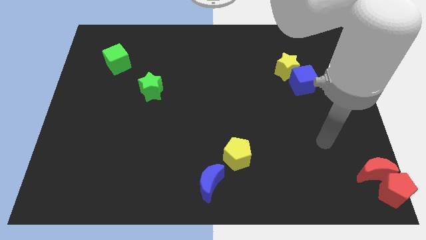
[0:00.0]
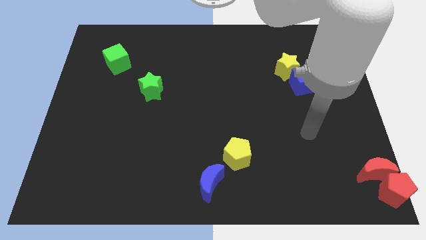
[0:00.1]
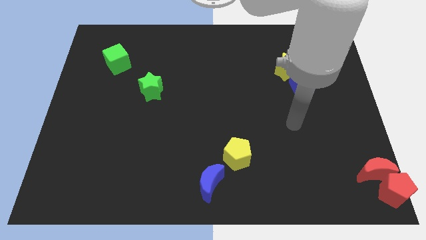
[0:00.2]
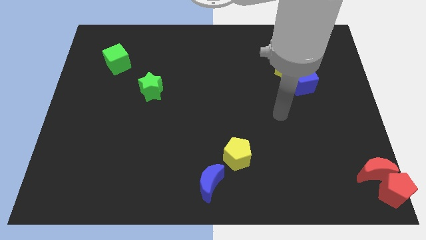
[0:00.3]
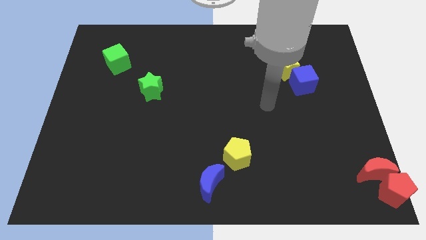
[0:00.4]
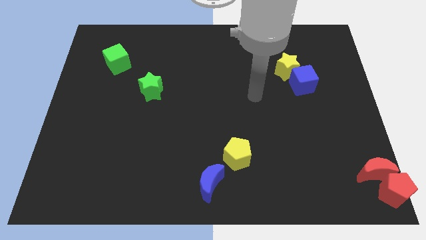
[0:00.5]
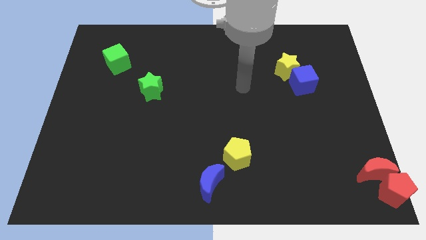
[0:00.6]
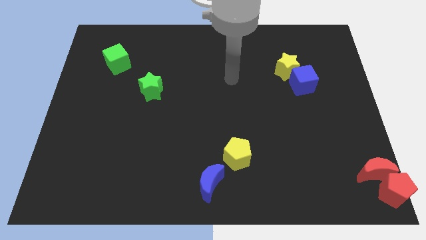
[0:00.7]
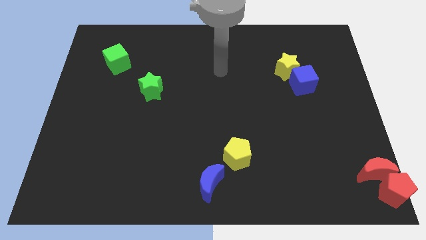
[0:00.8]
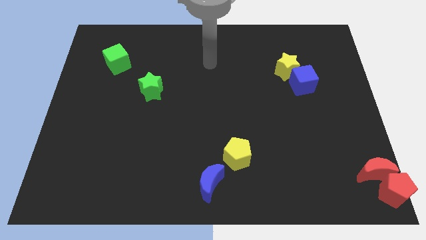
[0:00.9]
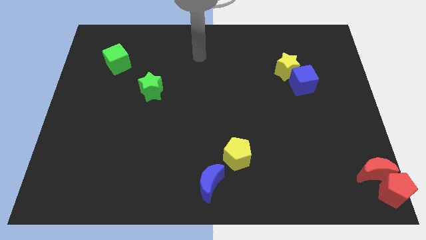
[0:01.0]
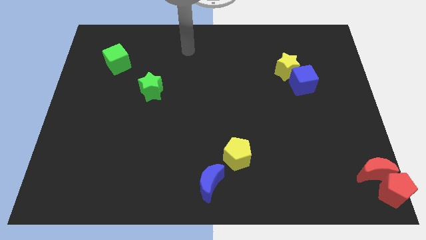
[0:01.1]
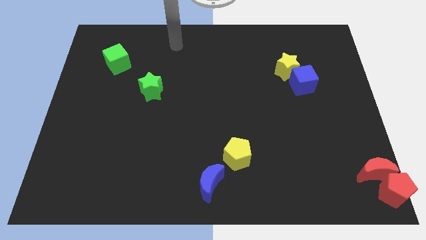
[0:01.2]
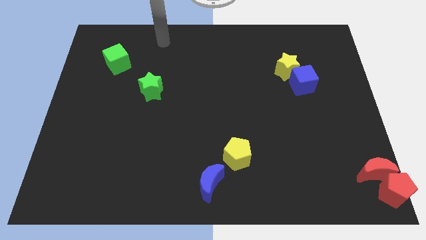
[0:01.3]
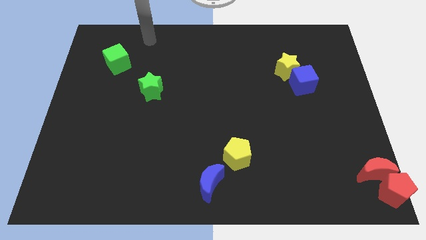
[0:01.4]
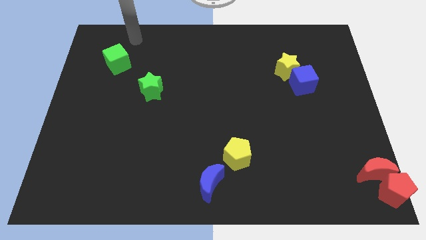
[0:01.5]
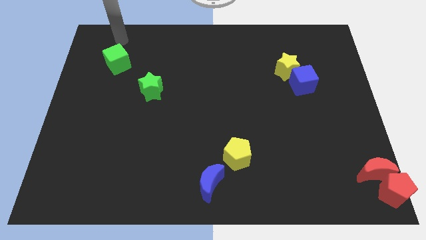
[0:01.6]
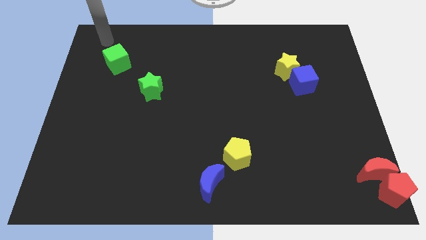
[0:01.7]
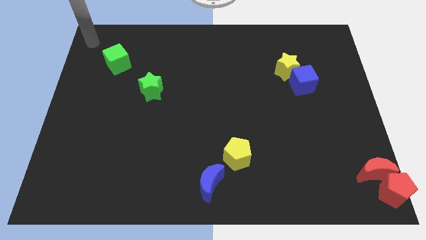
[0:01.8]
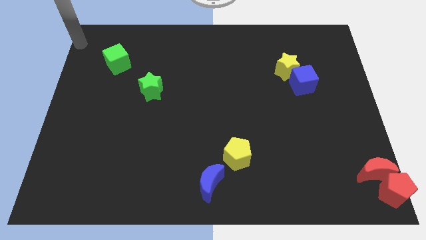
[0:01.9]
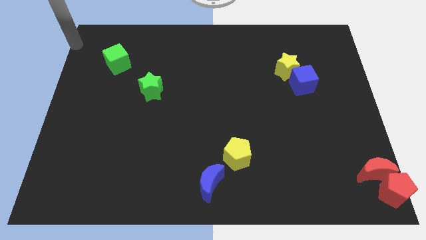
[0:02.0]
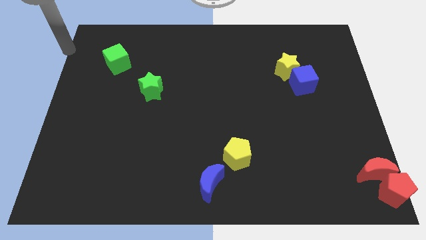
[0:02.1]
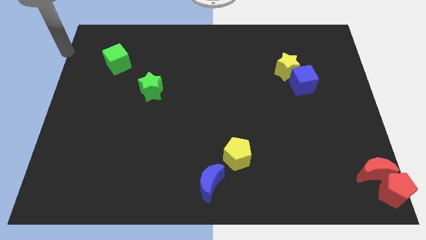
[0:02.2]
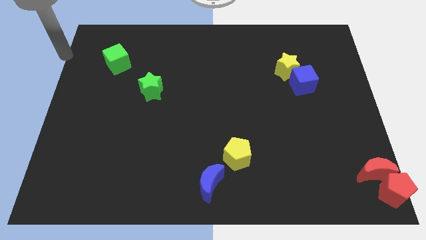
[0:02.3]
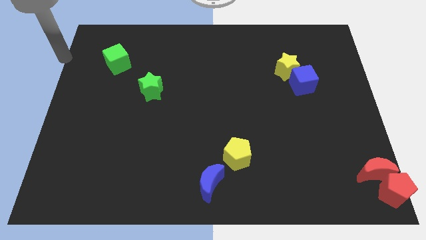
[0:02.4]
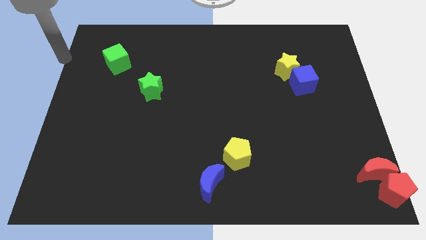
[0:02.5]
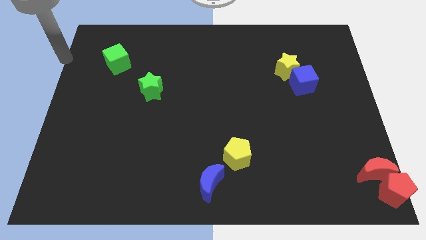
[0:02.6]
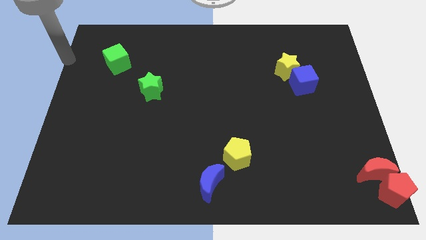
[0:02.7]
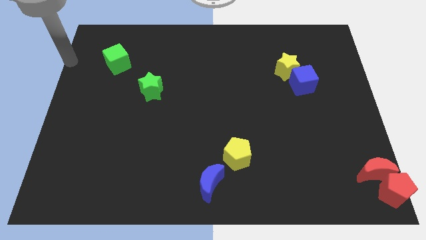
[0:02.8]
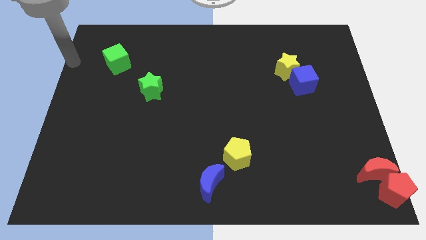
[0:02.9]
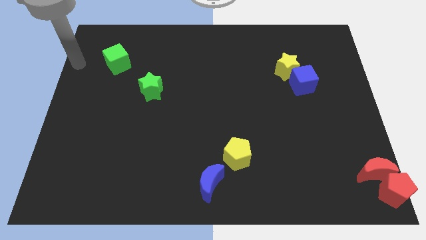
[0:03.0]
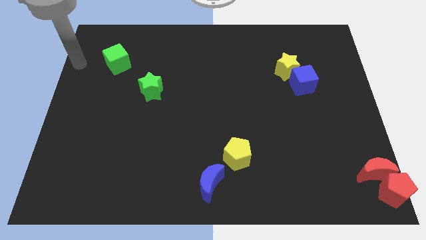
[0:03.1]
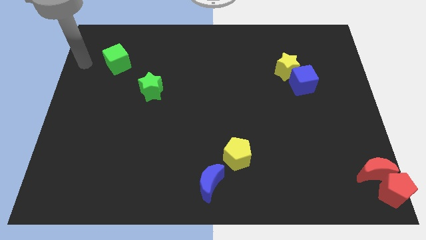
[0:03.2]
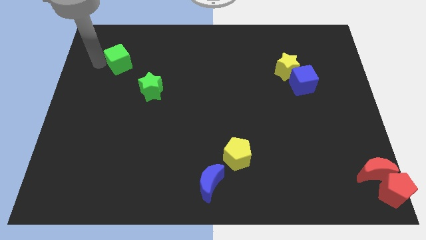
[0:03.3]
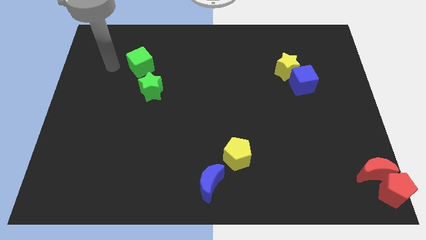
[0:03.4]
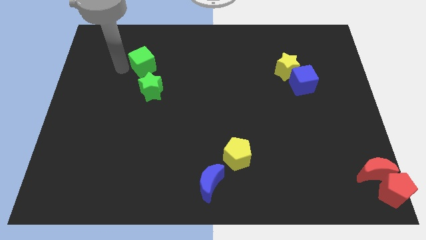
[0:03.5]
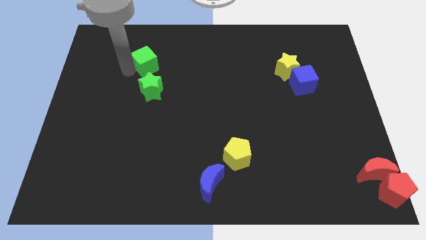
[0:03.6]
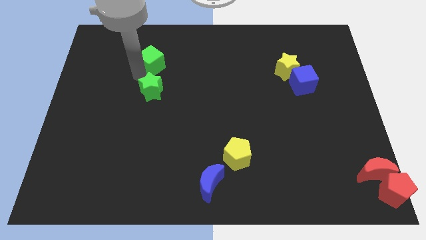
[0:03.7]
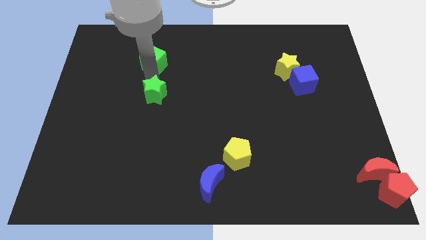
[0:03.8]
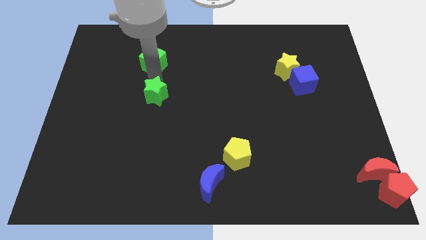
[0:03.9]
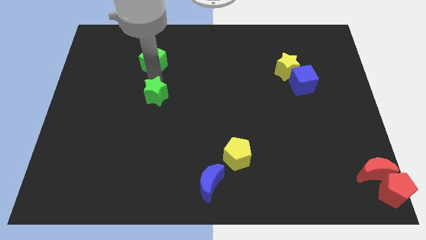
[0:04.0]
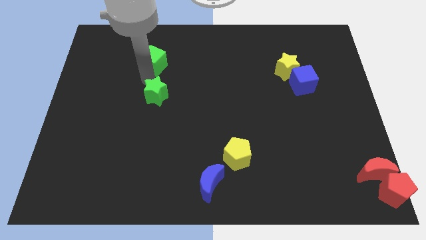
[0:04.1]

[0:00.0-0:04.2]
place the green cube vertically above the green star

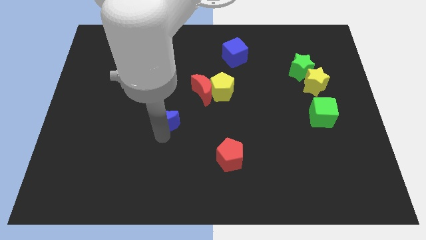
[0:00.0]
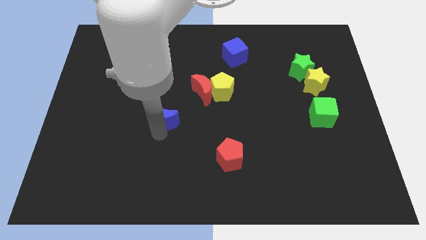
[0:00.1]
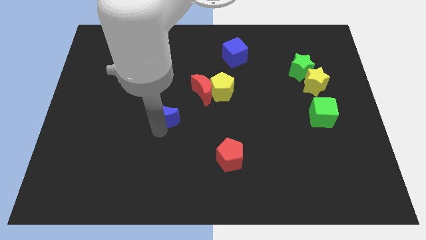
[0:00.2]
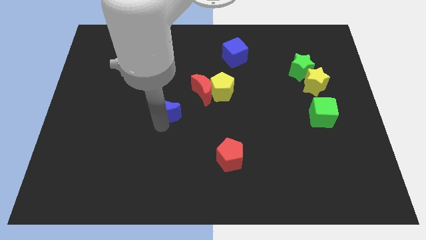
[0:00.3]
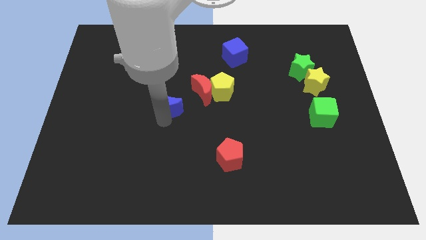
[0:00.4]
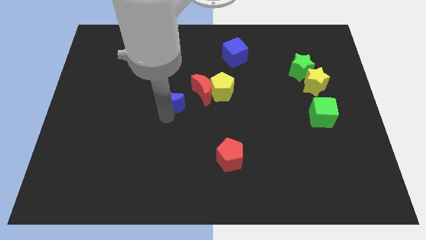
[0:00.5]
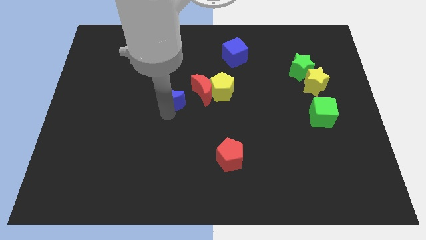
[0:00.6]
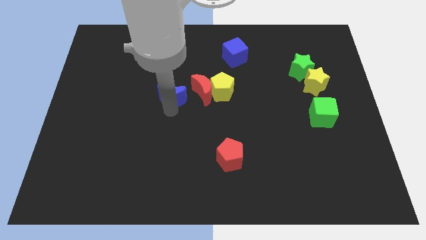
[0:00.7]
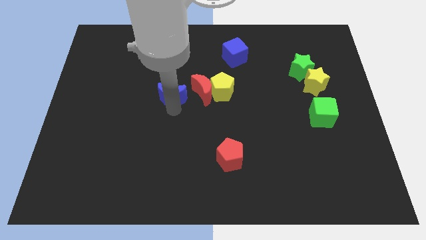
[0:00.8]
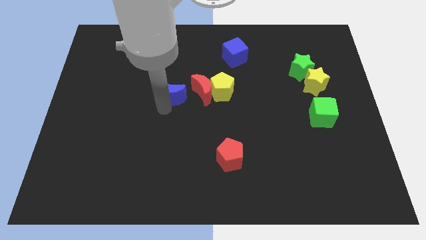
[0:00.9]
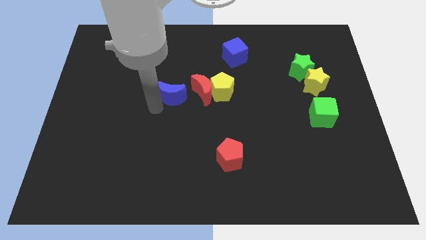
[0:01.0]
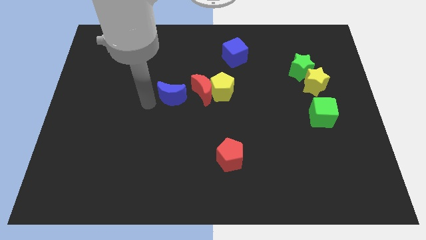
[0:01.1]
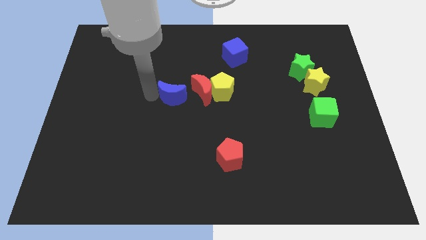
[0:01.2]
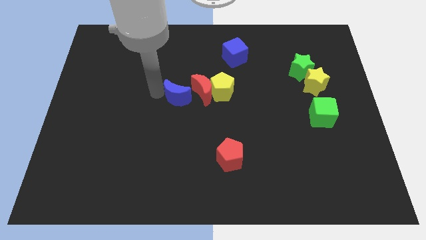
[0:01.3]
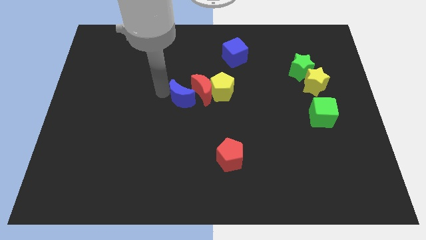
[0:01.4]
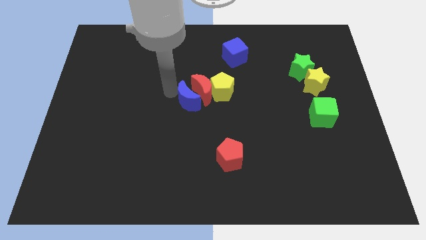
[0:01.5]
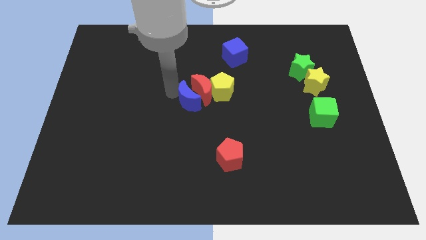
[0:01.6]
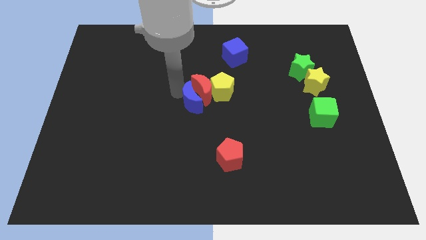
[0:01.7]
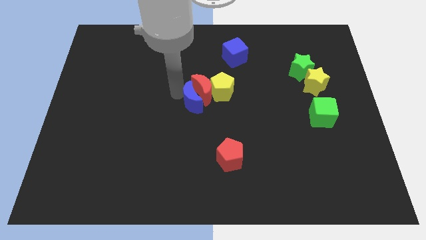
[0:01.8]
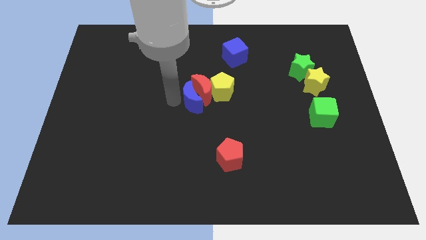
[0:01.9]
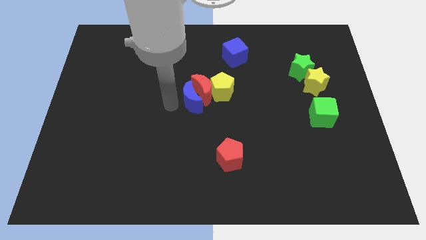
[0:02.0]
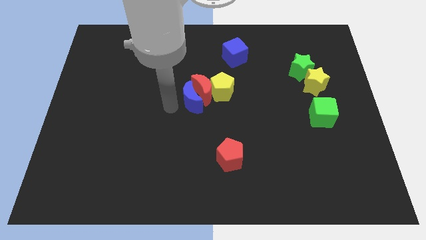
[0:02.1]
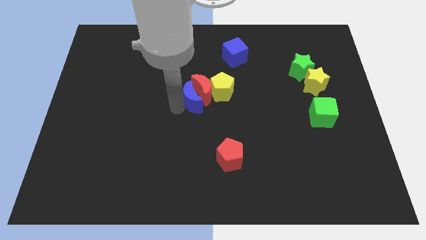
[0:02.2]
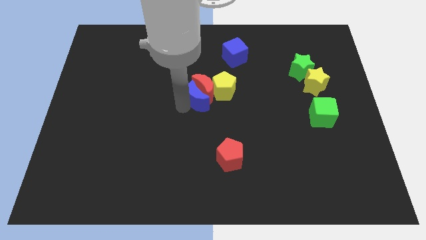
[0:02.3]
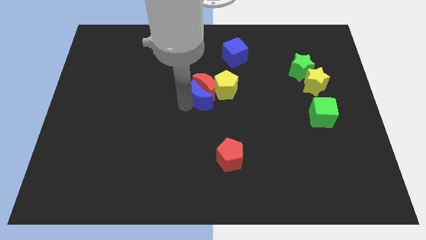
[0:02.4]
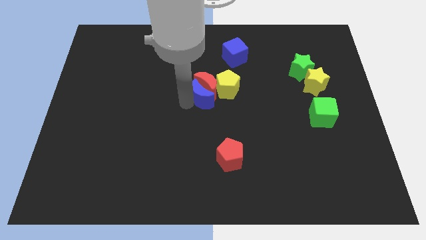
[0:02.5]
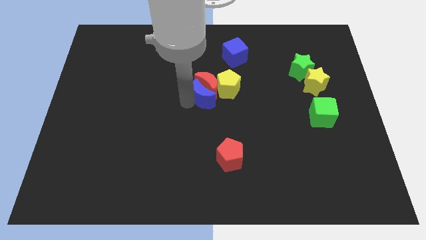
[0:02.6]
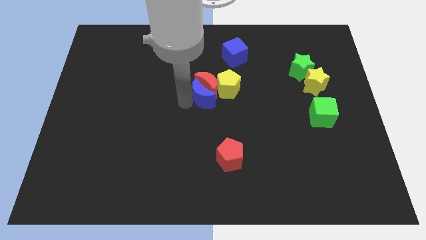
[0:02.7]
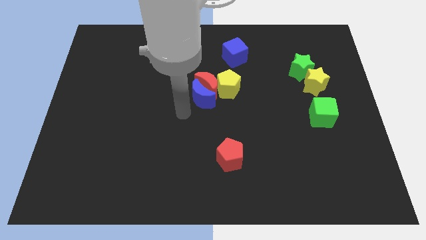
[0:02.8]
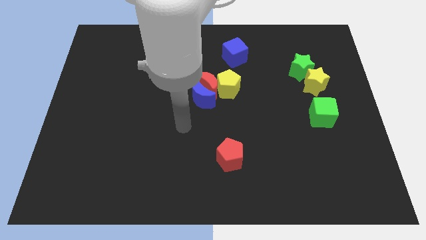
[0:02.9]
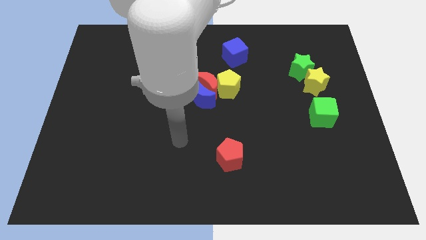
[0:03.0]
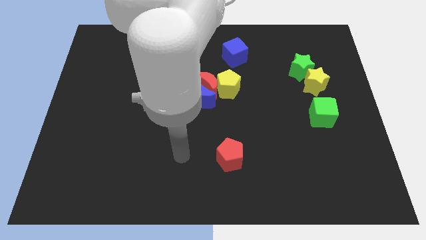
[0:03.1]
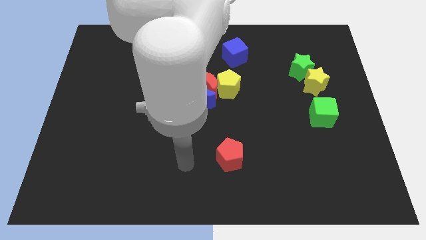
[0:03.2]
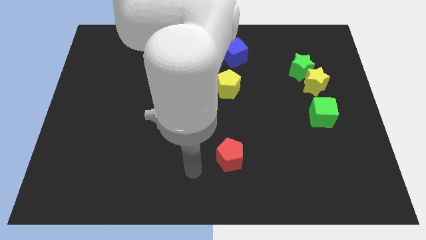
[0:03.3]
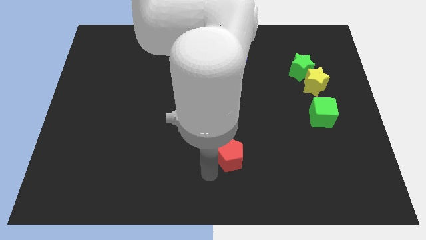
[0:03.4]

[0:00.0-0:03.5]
put the blue moon into the red moon

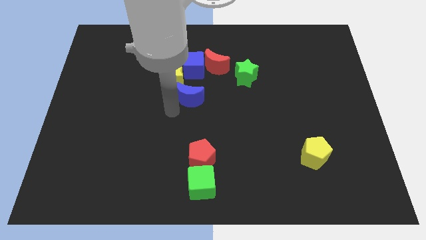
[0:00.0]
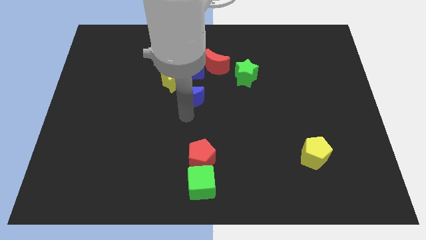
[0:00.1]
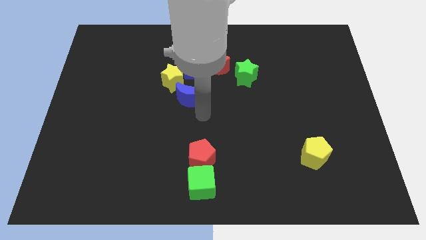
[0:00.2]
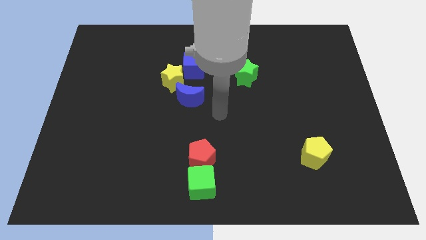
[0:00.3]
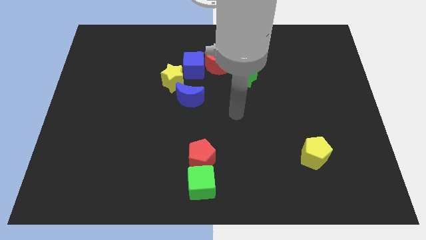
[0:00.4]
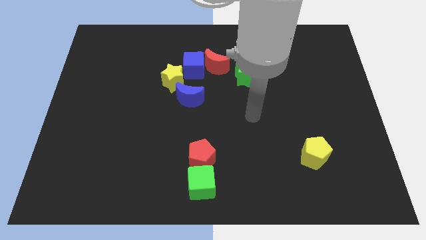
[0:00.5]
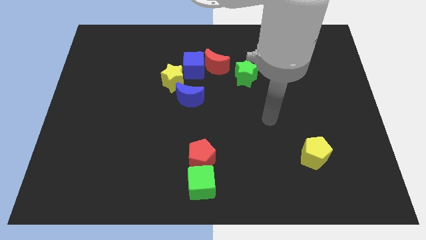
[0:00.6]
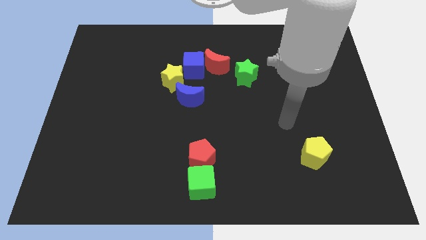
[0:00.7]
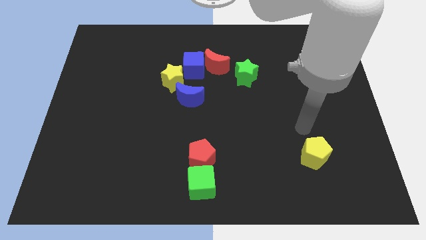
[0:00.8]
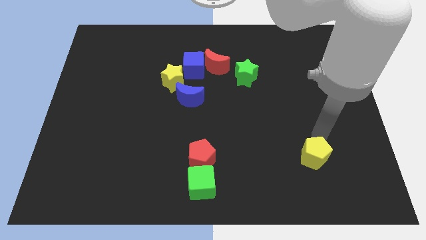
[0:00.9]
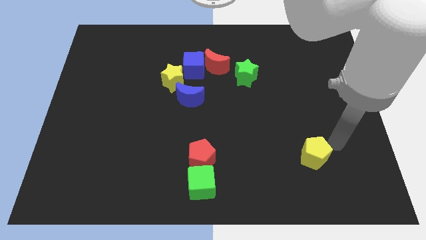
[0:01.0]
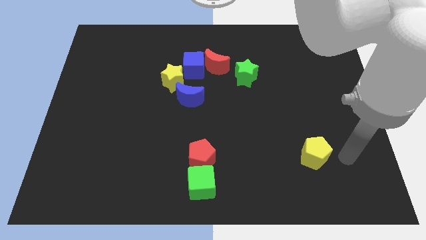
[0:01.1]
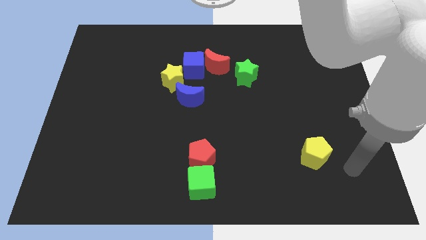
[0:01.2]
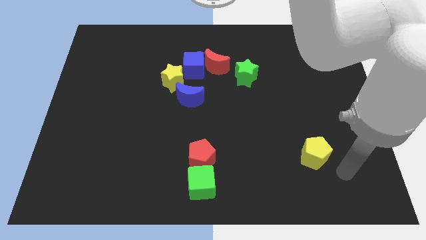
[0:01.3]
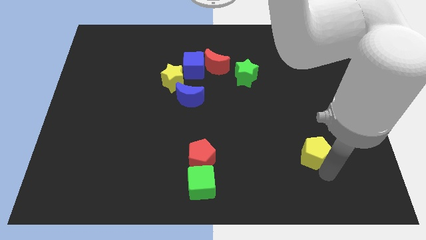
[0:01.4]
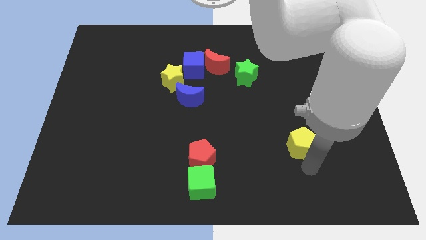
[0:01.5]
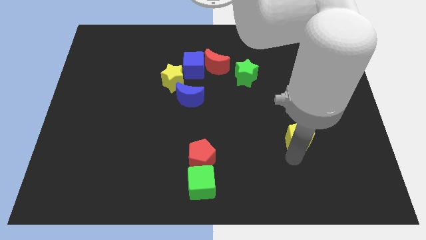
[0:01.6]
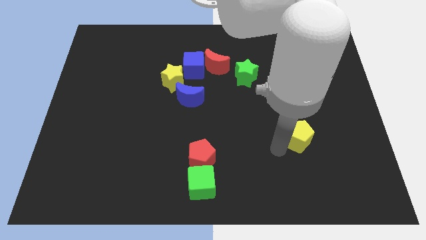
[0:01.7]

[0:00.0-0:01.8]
slightly move the yellow pentagon towards top
